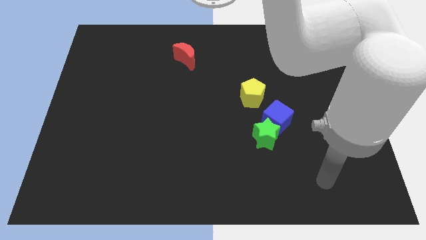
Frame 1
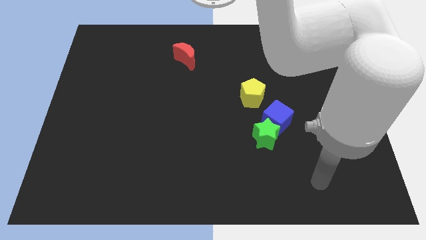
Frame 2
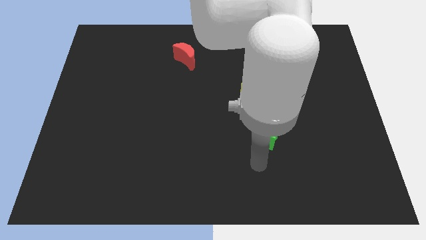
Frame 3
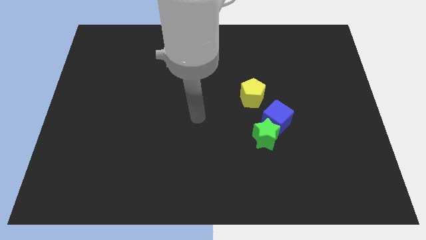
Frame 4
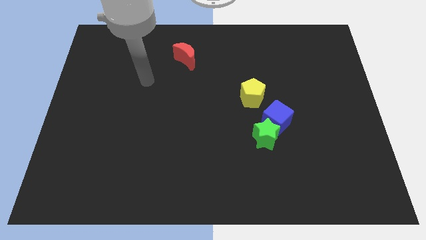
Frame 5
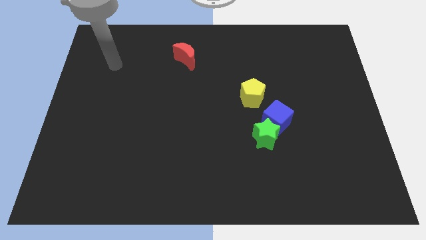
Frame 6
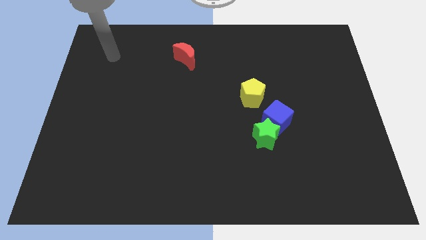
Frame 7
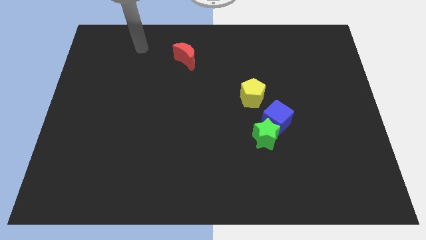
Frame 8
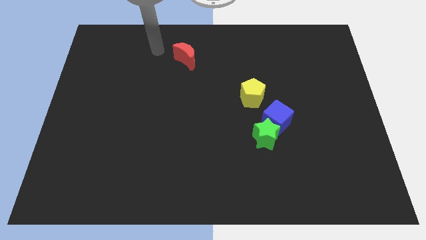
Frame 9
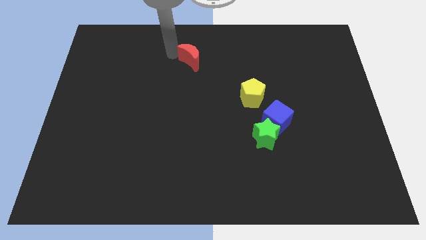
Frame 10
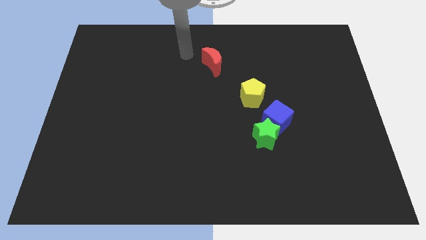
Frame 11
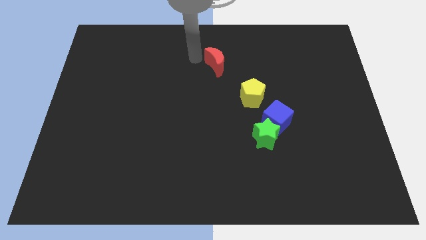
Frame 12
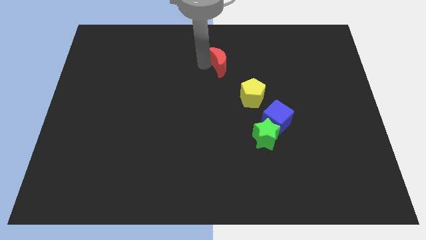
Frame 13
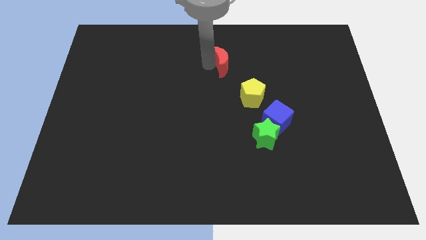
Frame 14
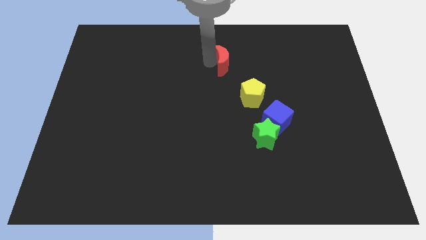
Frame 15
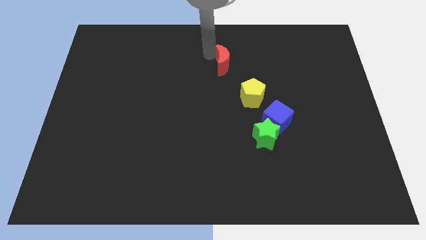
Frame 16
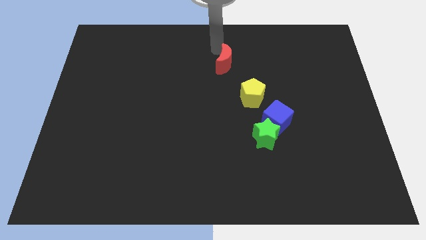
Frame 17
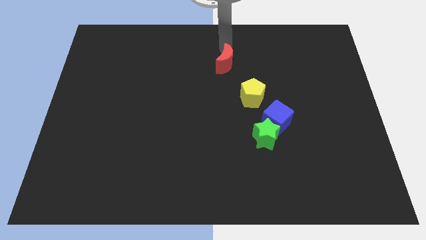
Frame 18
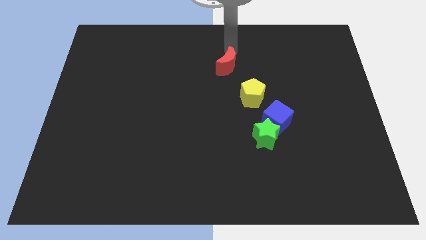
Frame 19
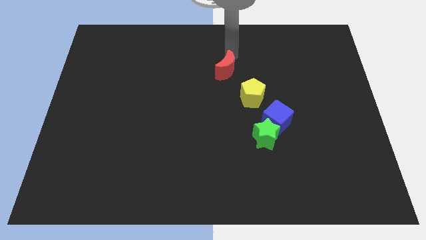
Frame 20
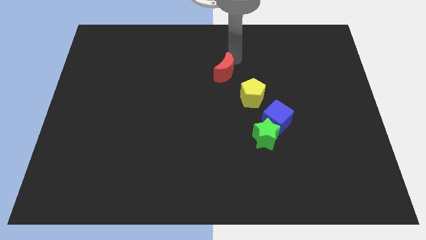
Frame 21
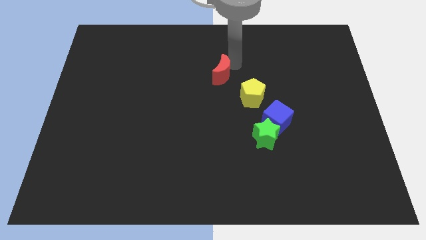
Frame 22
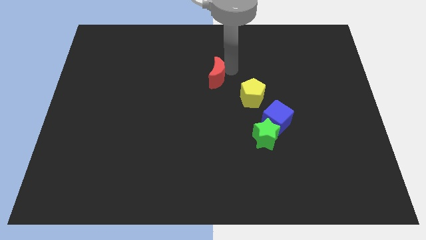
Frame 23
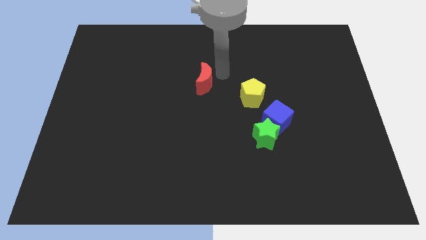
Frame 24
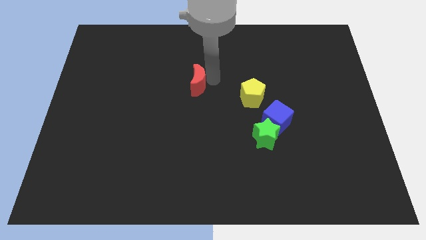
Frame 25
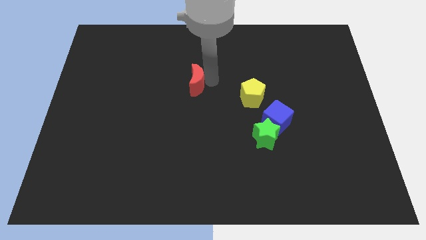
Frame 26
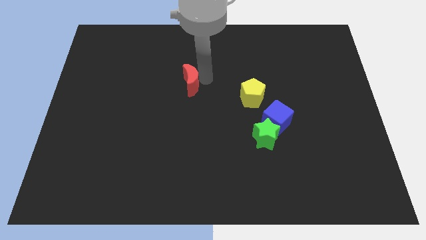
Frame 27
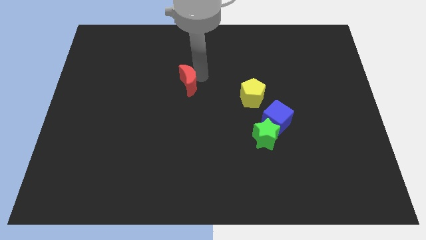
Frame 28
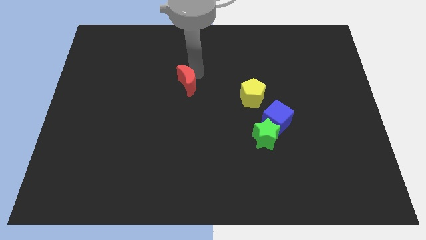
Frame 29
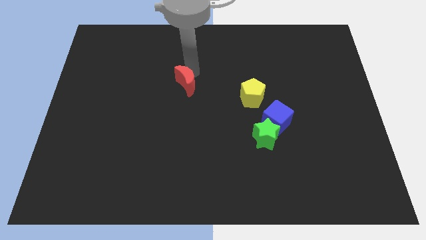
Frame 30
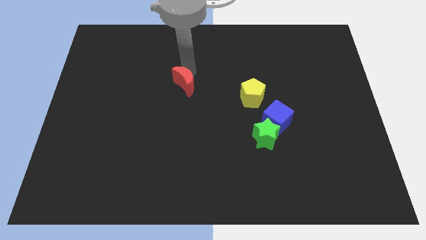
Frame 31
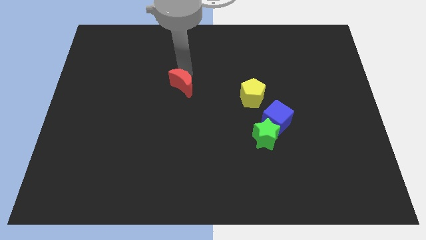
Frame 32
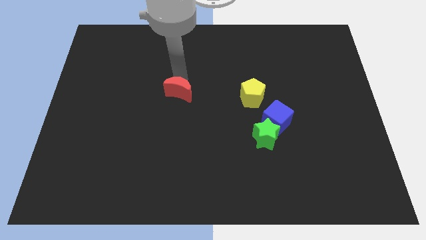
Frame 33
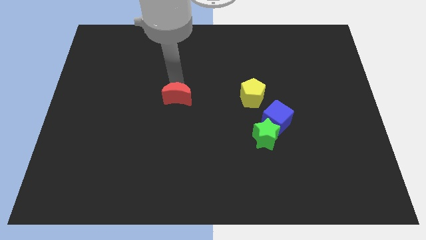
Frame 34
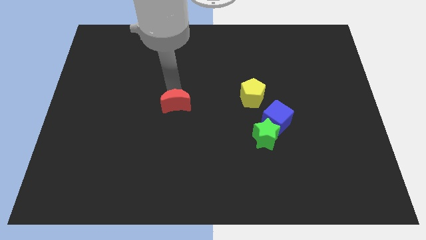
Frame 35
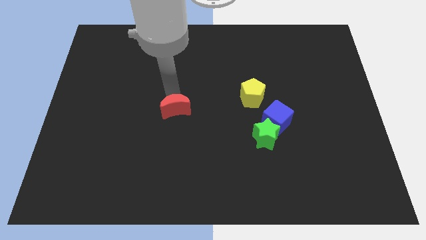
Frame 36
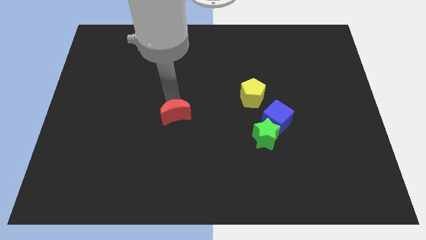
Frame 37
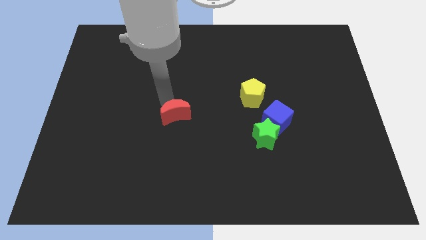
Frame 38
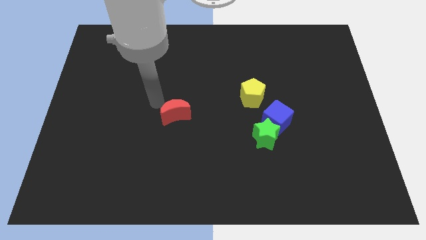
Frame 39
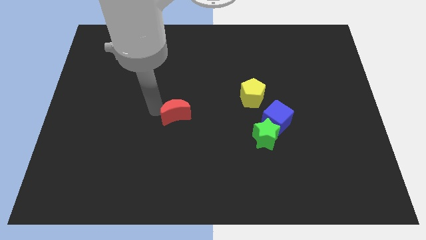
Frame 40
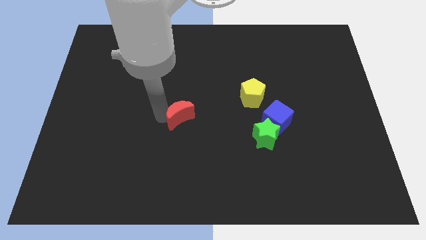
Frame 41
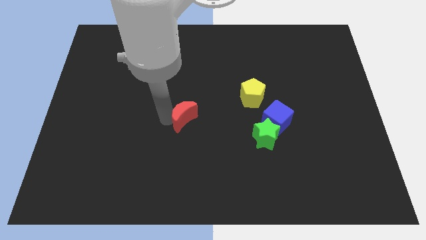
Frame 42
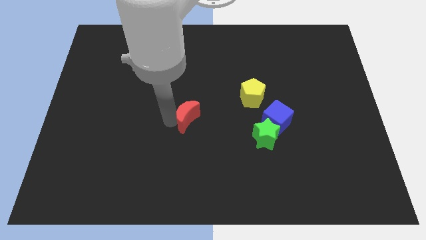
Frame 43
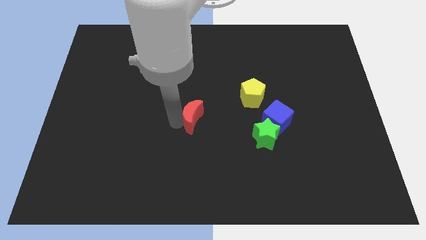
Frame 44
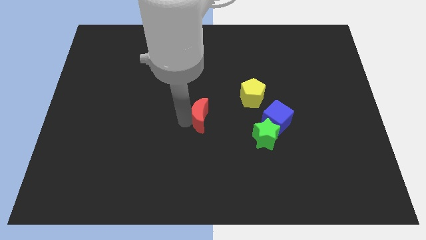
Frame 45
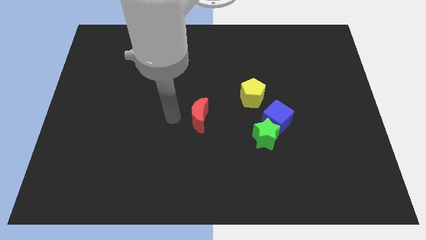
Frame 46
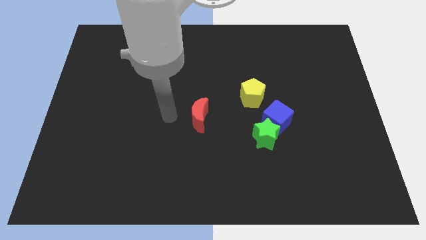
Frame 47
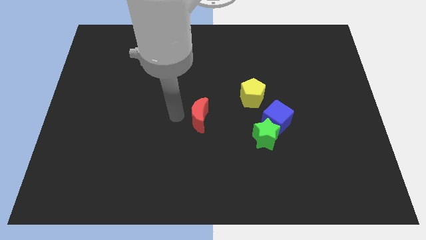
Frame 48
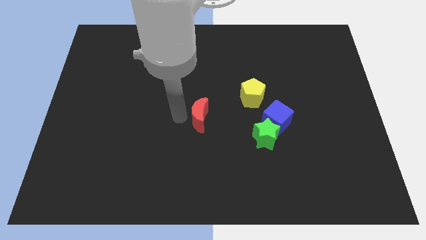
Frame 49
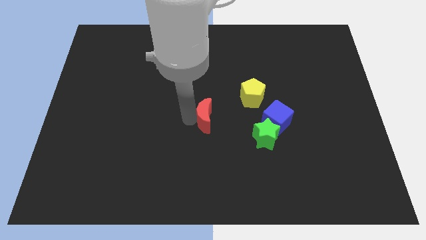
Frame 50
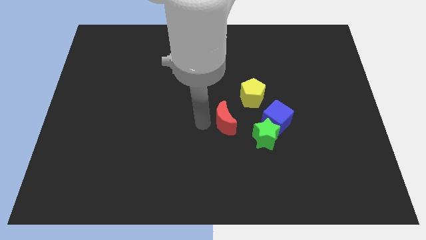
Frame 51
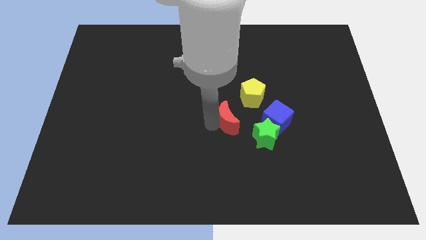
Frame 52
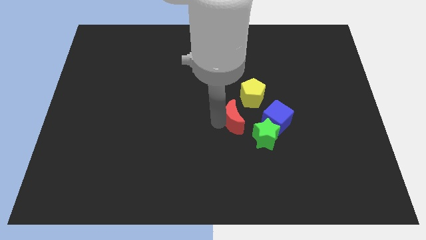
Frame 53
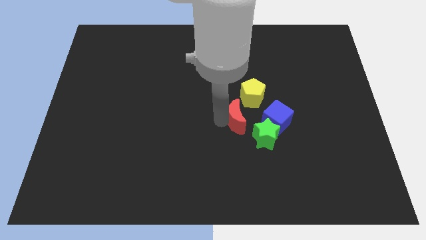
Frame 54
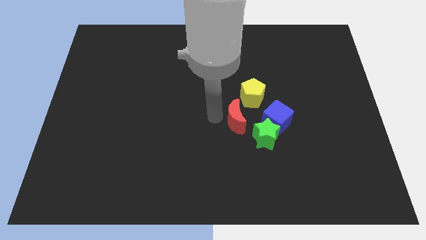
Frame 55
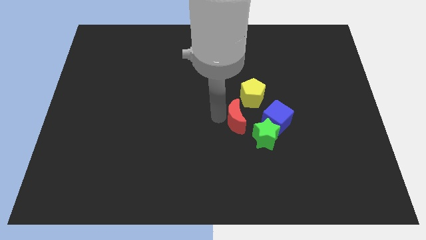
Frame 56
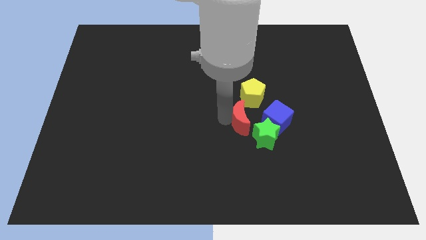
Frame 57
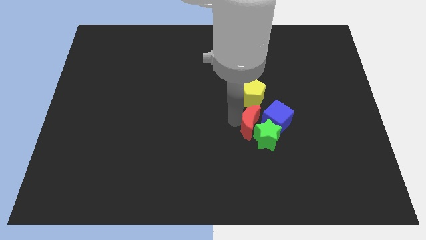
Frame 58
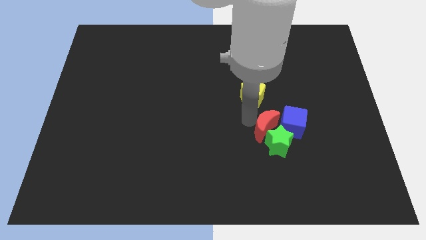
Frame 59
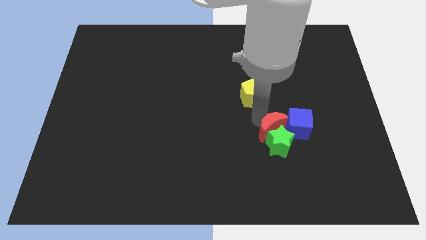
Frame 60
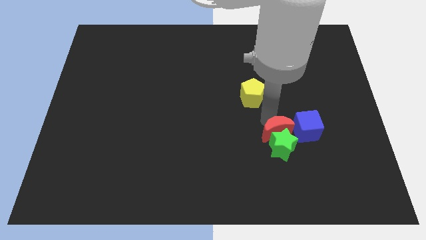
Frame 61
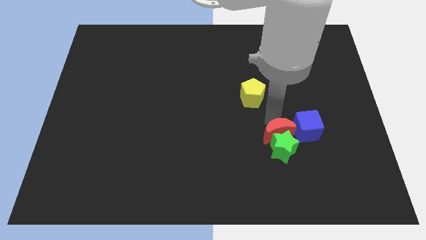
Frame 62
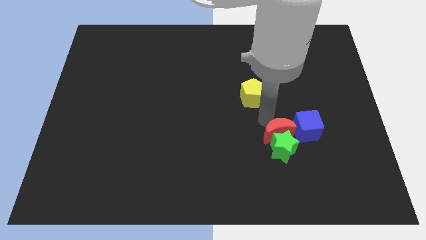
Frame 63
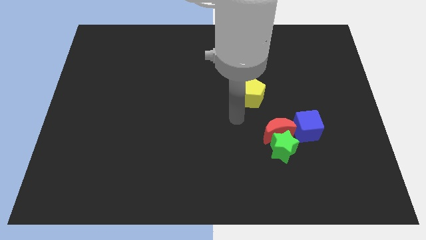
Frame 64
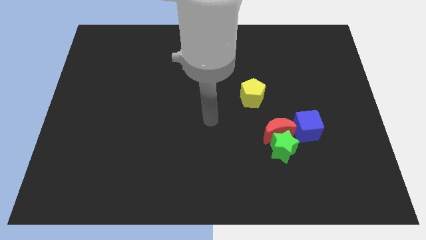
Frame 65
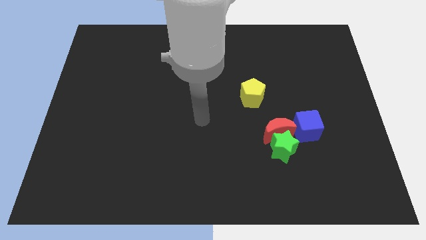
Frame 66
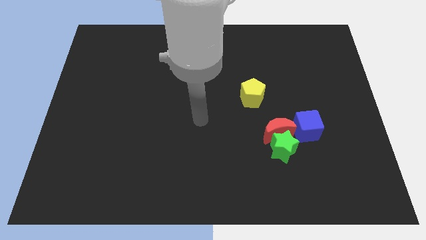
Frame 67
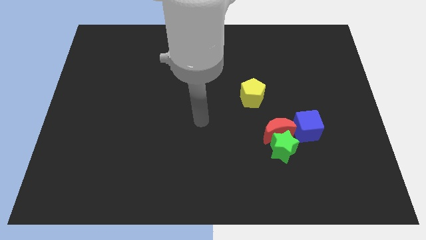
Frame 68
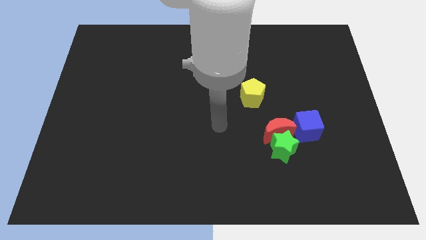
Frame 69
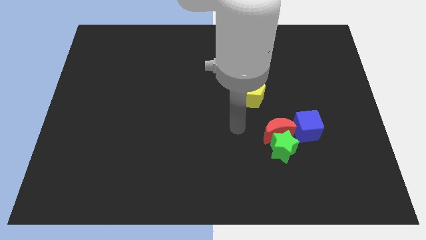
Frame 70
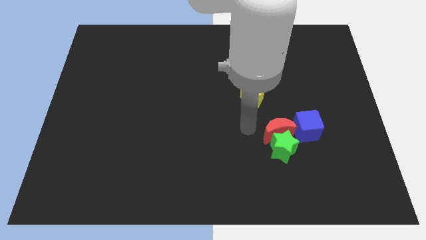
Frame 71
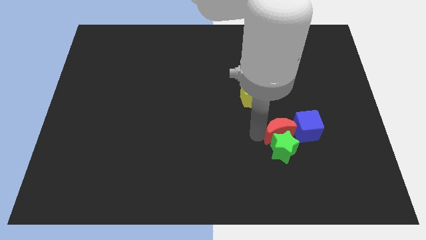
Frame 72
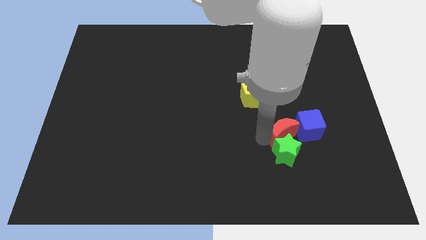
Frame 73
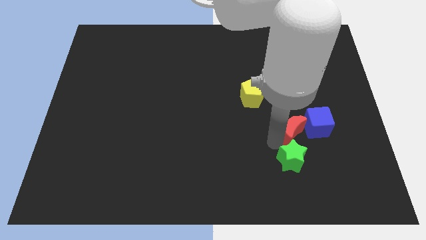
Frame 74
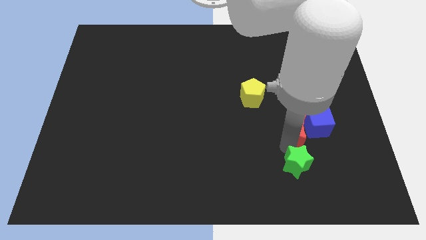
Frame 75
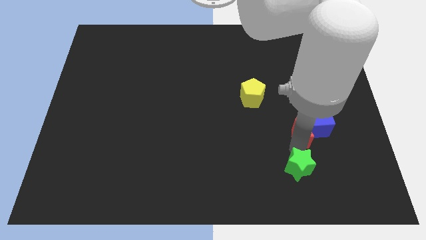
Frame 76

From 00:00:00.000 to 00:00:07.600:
move the red block close to the blue block

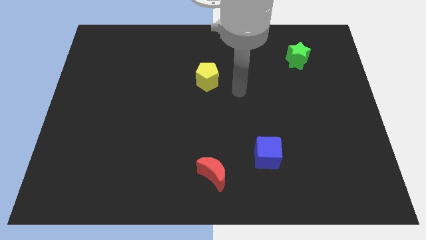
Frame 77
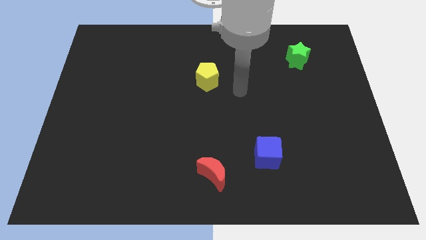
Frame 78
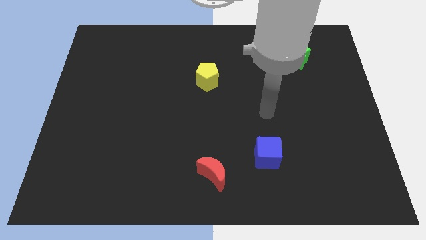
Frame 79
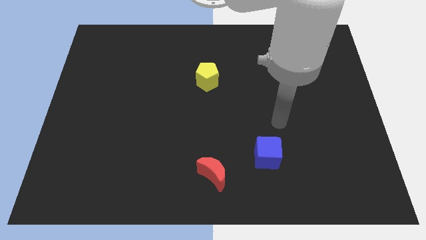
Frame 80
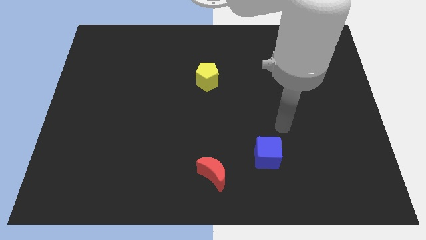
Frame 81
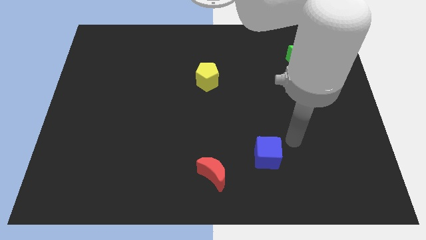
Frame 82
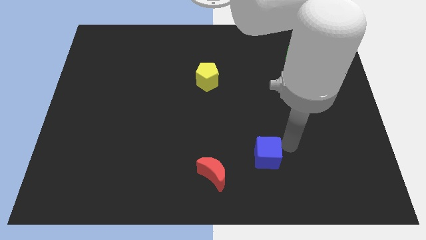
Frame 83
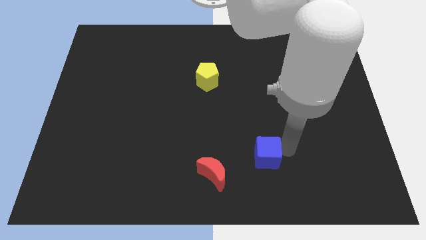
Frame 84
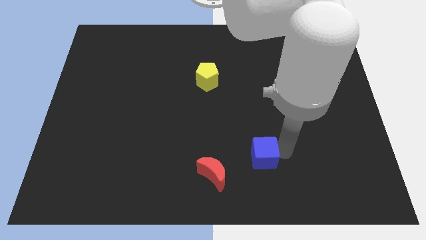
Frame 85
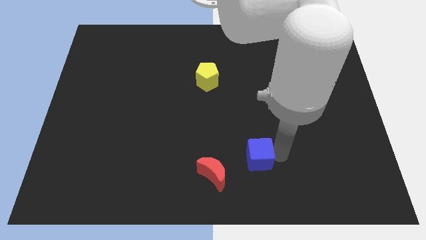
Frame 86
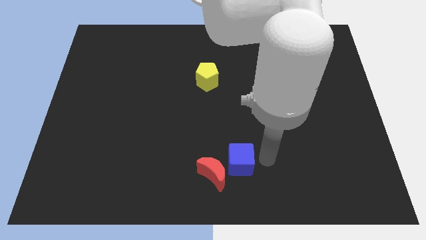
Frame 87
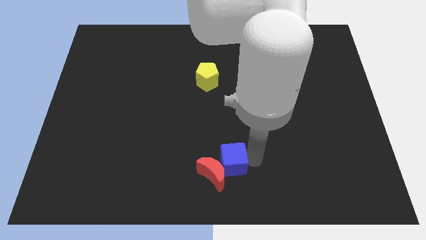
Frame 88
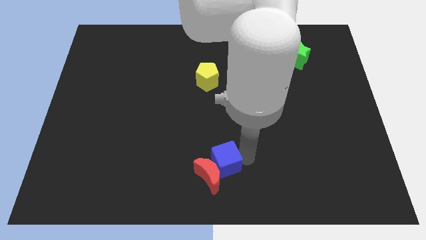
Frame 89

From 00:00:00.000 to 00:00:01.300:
slide the blue cube towards the red block
